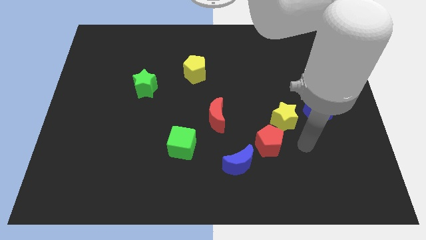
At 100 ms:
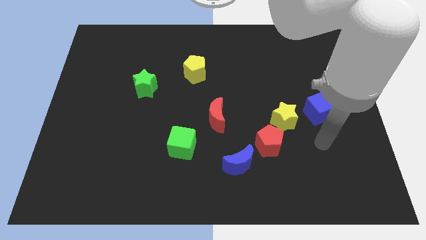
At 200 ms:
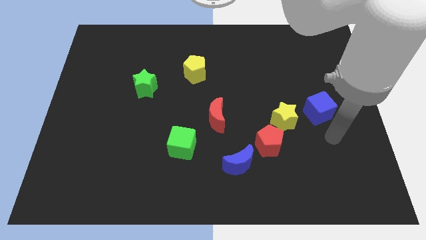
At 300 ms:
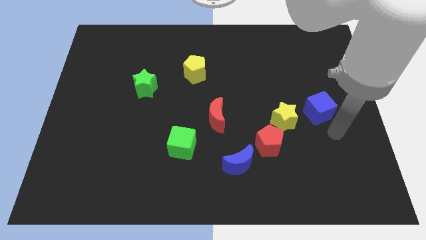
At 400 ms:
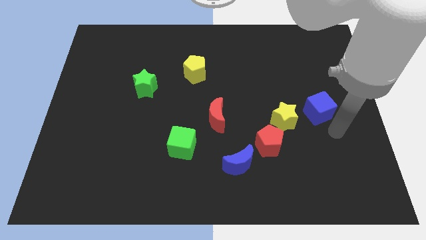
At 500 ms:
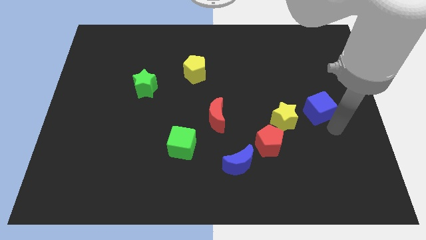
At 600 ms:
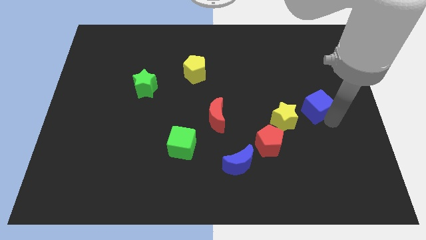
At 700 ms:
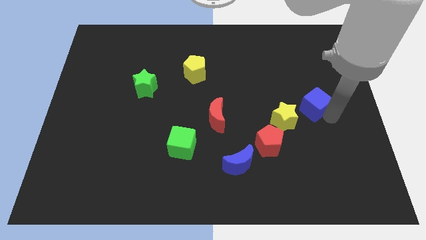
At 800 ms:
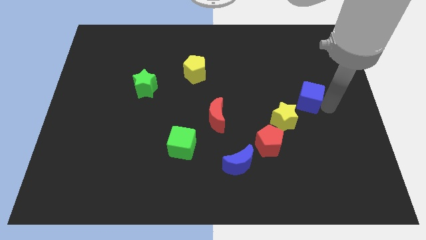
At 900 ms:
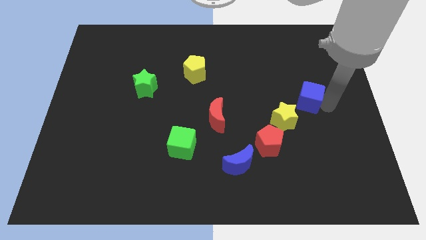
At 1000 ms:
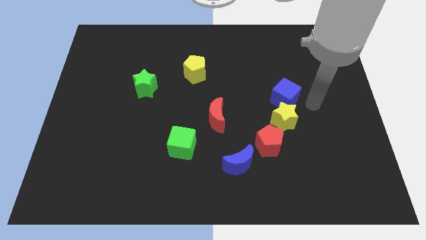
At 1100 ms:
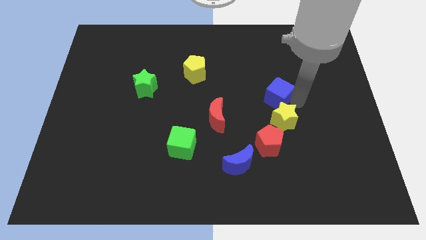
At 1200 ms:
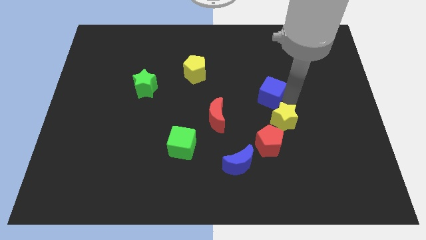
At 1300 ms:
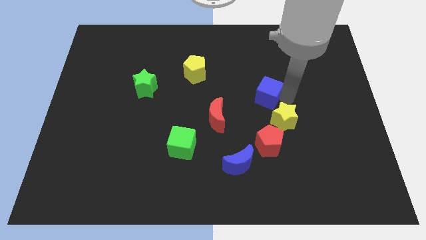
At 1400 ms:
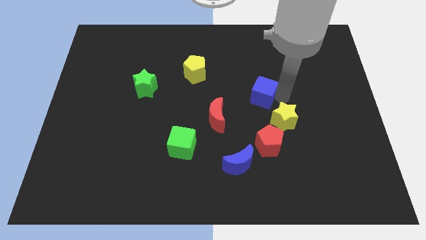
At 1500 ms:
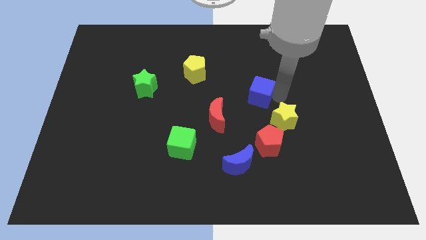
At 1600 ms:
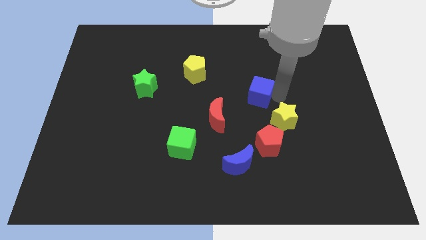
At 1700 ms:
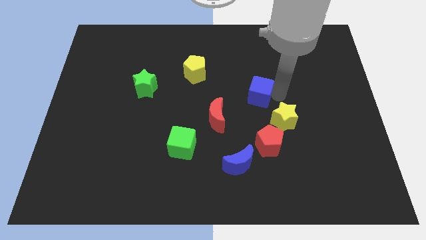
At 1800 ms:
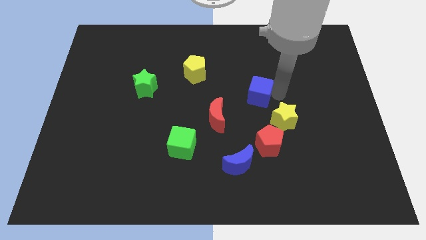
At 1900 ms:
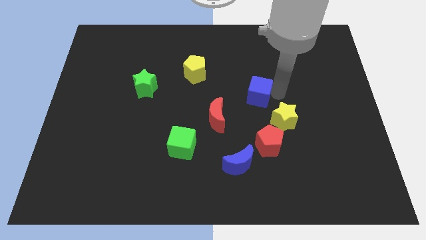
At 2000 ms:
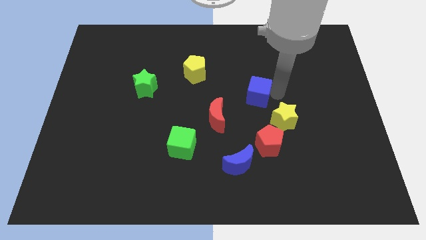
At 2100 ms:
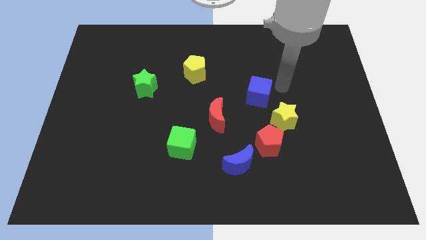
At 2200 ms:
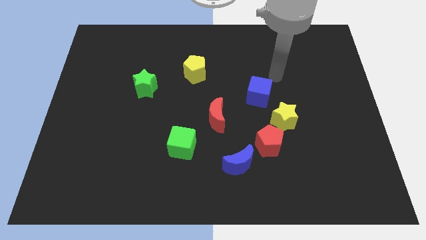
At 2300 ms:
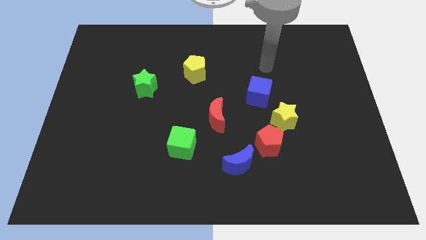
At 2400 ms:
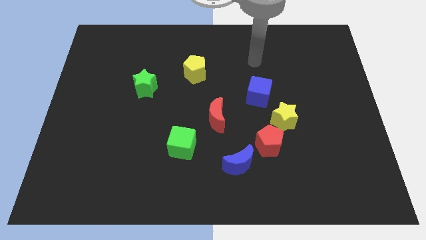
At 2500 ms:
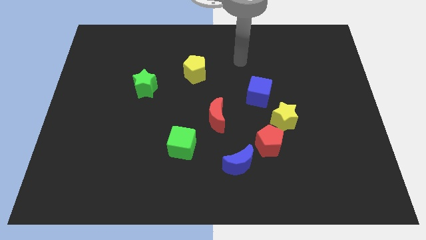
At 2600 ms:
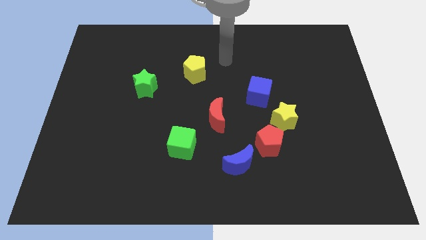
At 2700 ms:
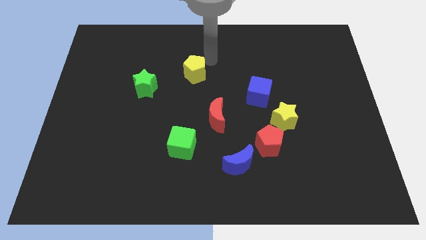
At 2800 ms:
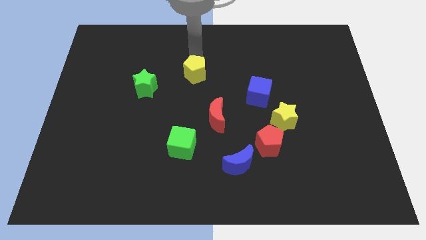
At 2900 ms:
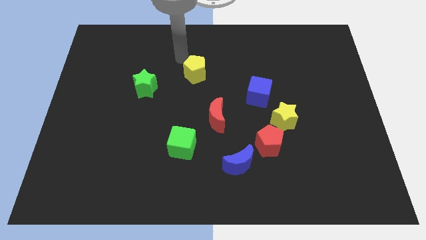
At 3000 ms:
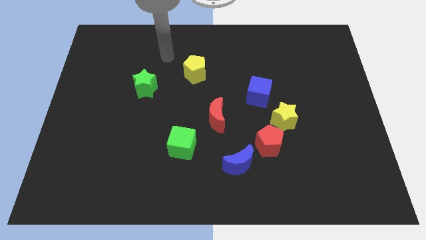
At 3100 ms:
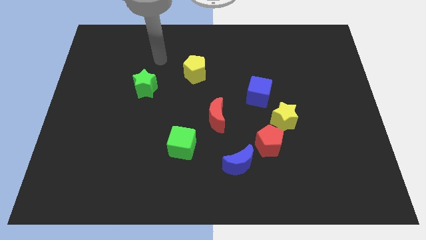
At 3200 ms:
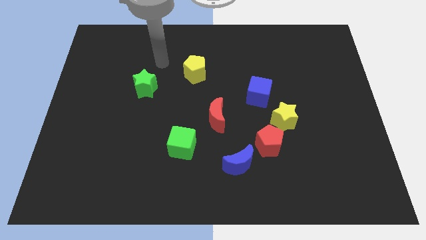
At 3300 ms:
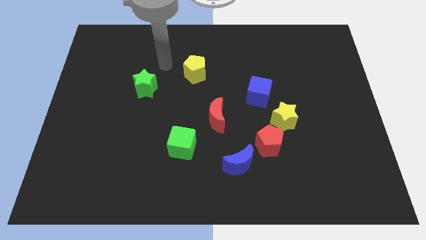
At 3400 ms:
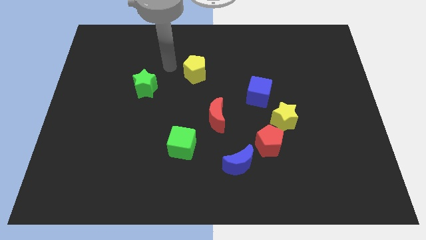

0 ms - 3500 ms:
place blue cube to the top of red pentagon

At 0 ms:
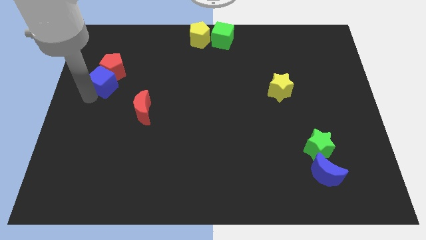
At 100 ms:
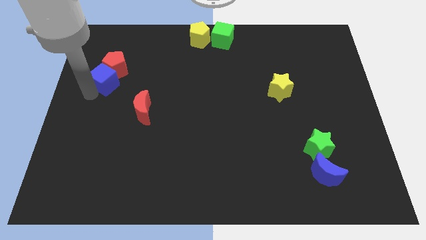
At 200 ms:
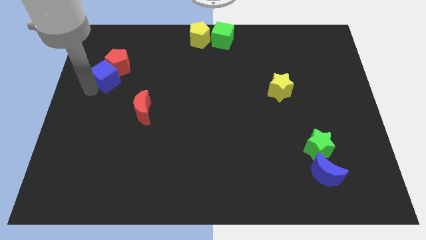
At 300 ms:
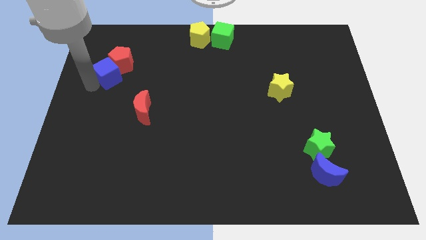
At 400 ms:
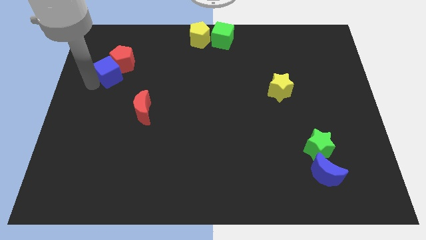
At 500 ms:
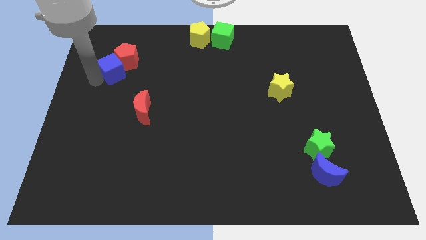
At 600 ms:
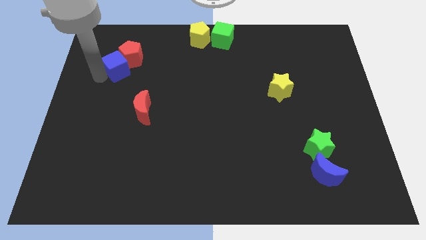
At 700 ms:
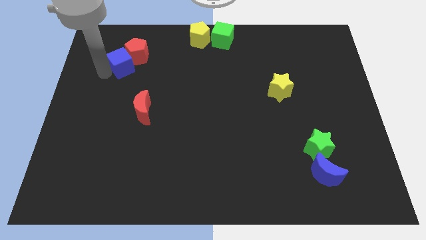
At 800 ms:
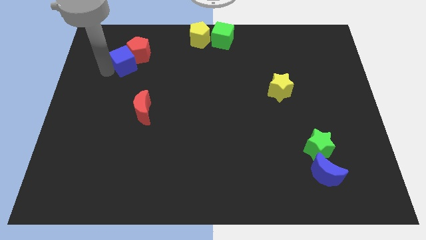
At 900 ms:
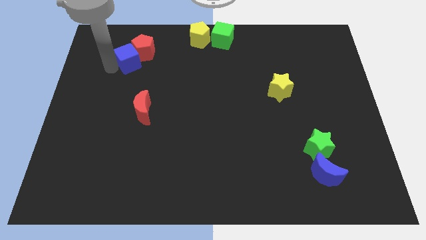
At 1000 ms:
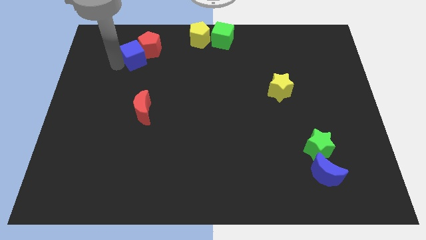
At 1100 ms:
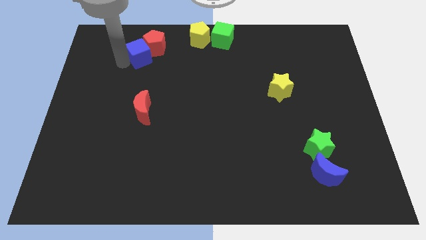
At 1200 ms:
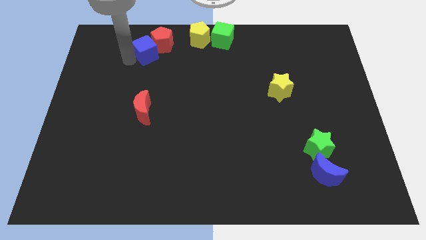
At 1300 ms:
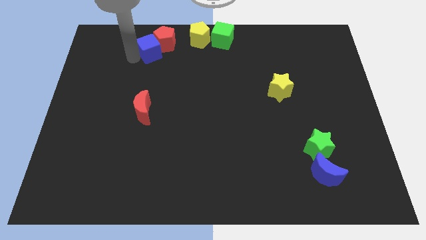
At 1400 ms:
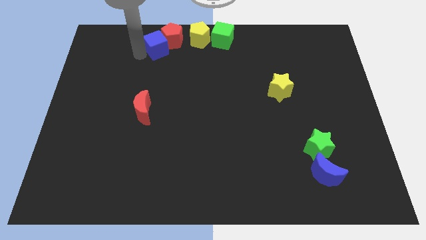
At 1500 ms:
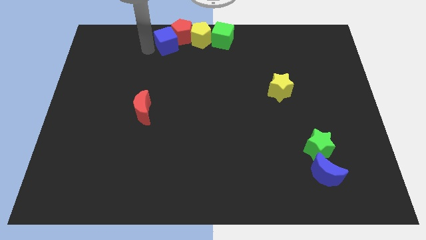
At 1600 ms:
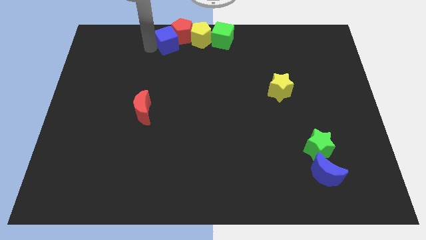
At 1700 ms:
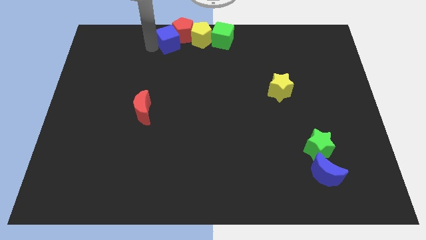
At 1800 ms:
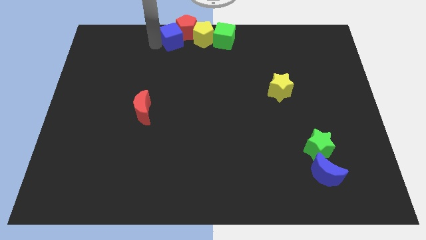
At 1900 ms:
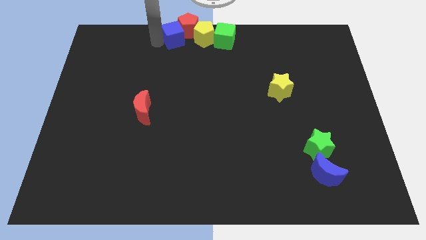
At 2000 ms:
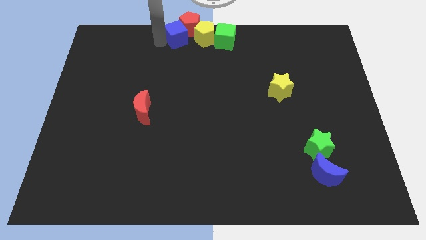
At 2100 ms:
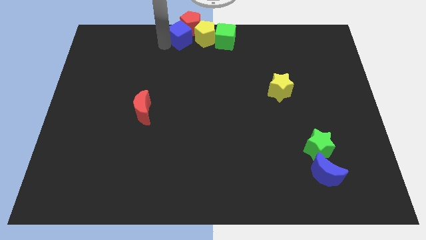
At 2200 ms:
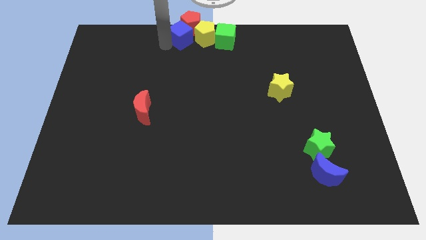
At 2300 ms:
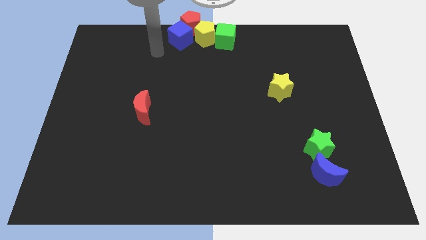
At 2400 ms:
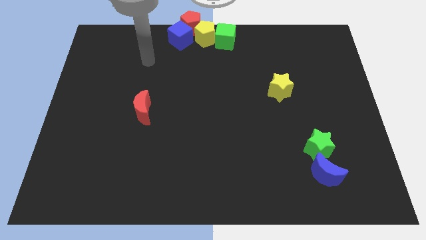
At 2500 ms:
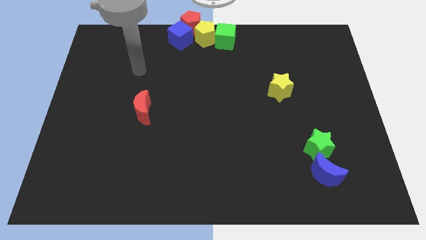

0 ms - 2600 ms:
drag the blue cube and red pentagon towards the top center

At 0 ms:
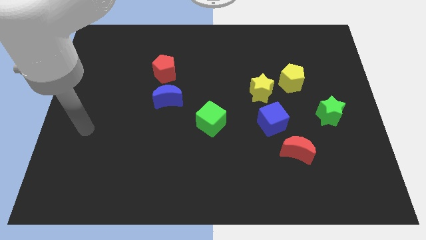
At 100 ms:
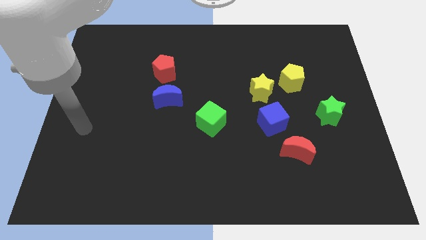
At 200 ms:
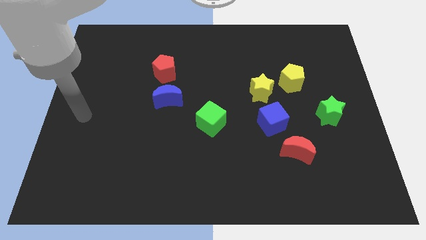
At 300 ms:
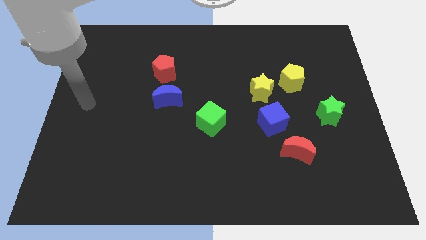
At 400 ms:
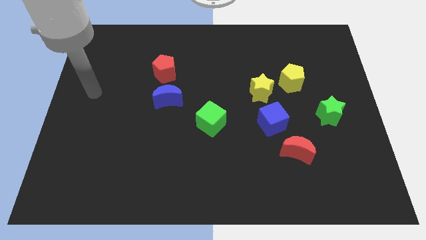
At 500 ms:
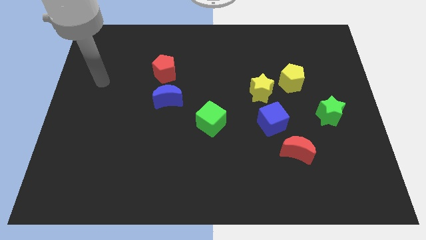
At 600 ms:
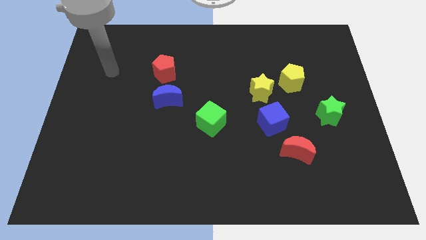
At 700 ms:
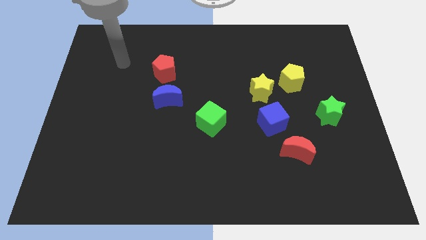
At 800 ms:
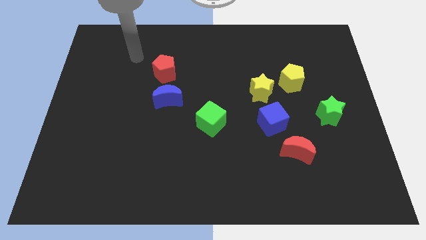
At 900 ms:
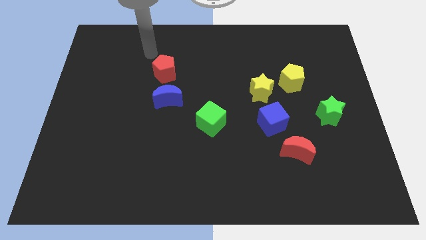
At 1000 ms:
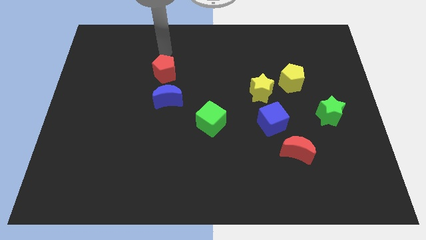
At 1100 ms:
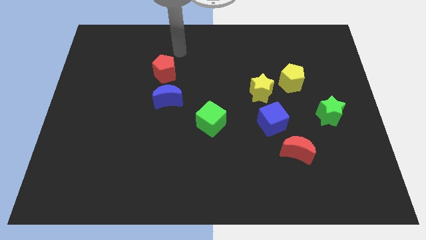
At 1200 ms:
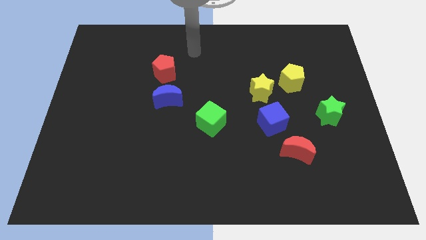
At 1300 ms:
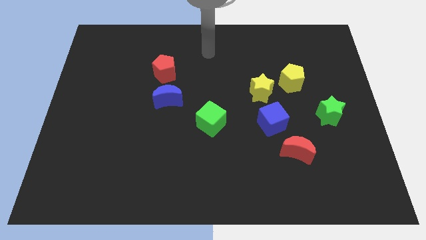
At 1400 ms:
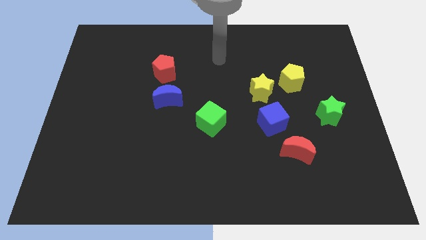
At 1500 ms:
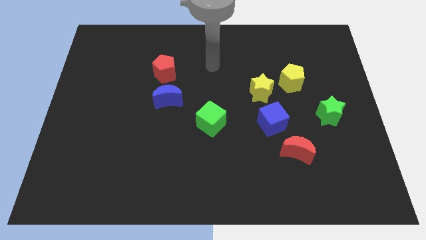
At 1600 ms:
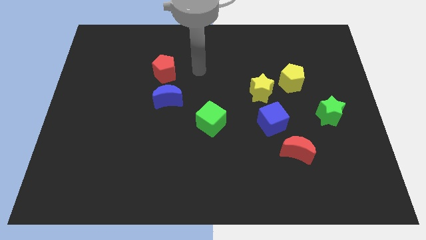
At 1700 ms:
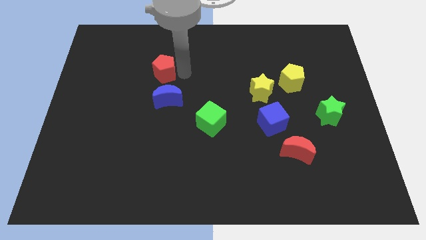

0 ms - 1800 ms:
move your arm towards the right

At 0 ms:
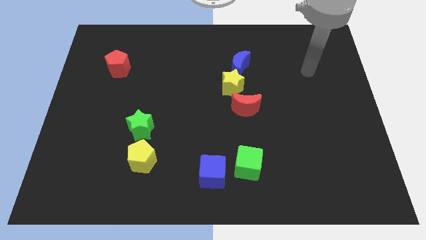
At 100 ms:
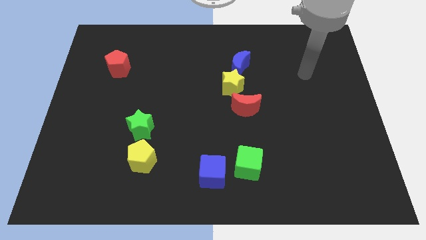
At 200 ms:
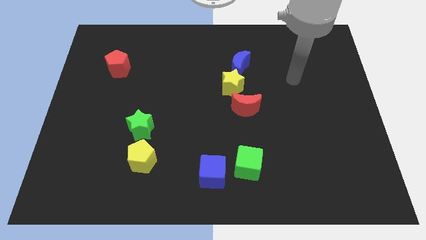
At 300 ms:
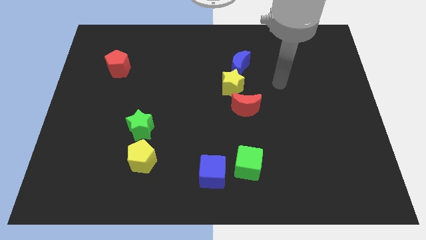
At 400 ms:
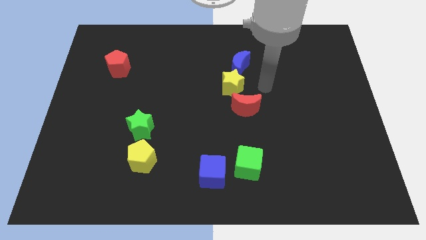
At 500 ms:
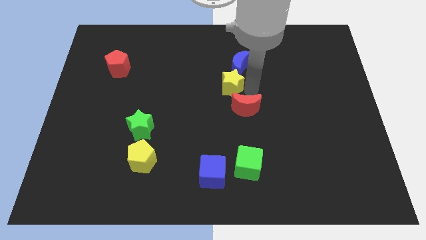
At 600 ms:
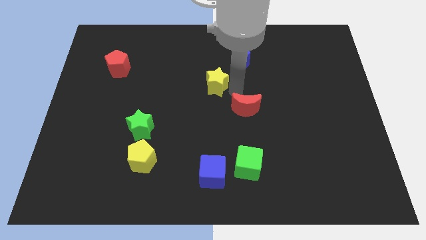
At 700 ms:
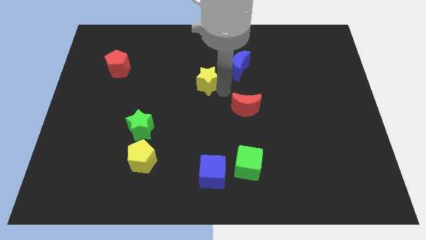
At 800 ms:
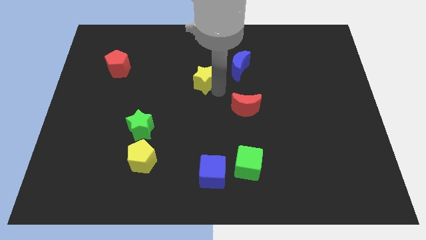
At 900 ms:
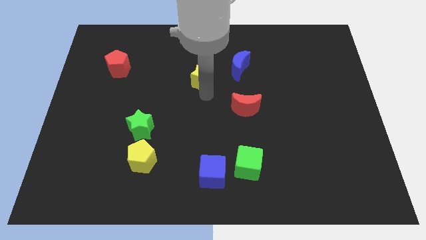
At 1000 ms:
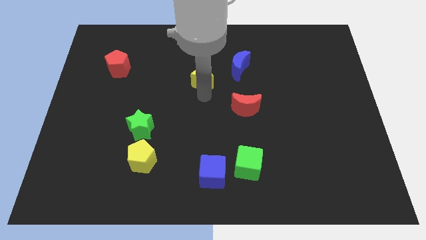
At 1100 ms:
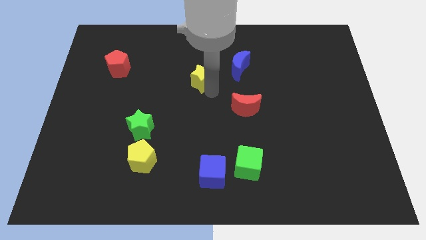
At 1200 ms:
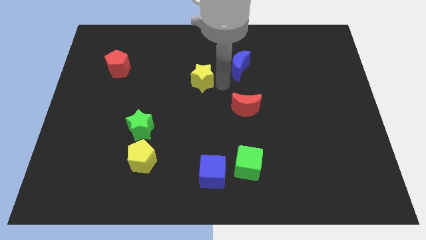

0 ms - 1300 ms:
separate yellow star from red crescent and blue crescent
